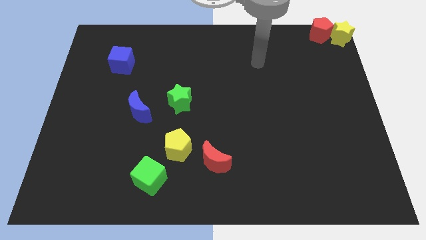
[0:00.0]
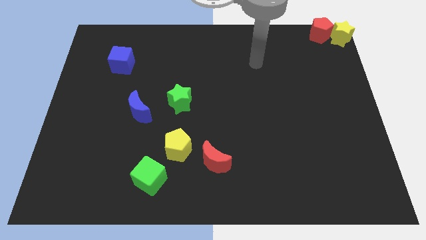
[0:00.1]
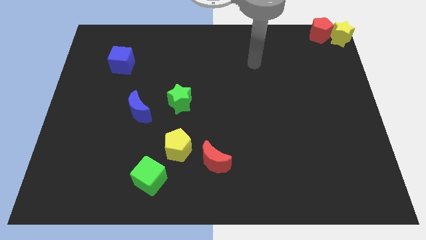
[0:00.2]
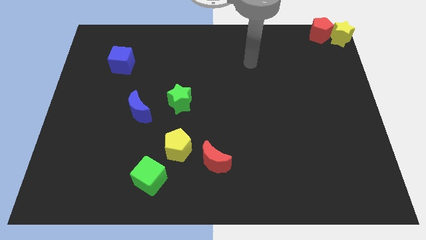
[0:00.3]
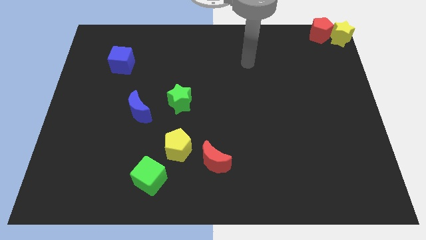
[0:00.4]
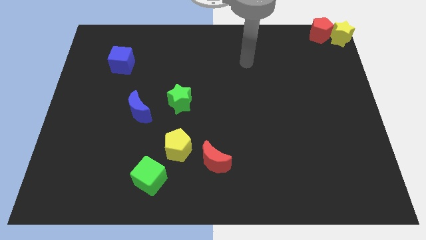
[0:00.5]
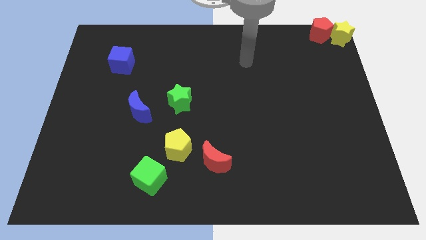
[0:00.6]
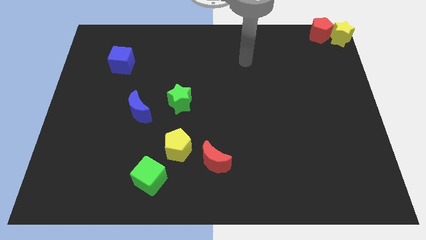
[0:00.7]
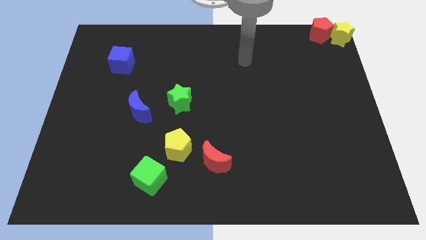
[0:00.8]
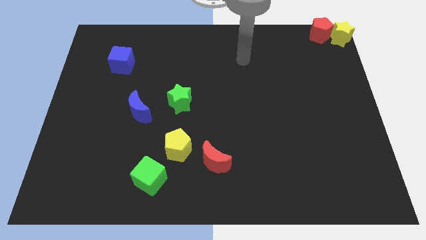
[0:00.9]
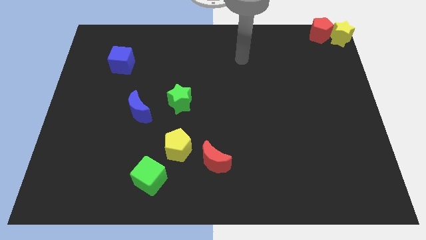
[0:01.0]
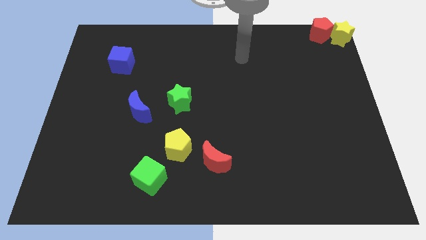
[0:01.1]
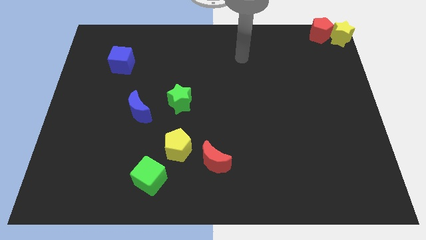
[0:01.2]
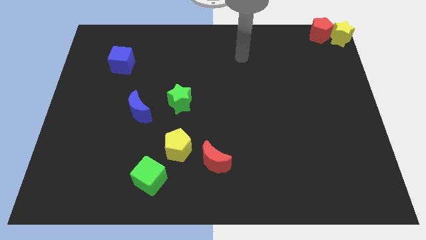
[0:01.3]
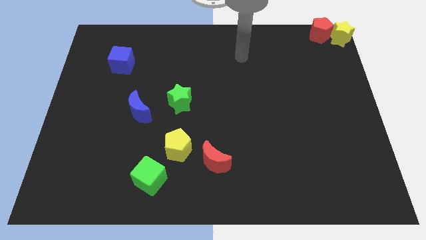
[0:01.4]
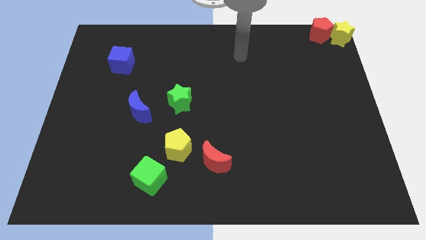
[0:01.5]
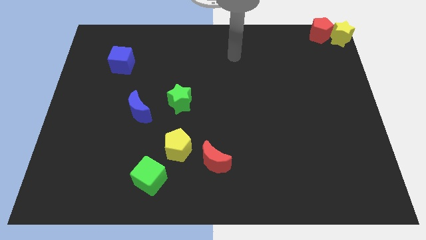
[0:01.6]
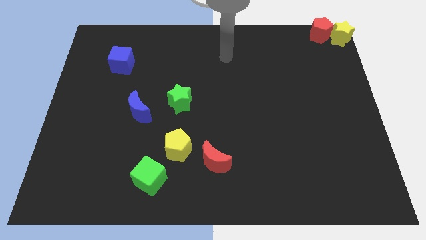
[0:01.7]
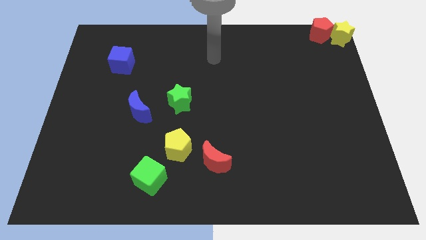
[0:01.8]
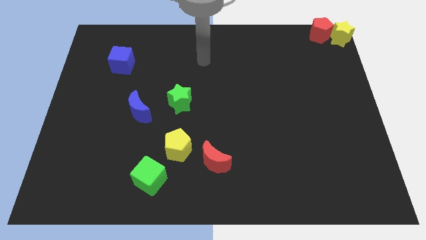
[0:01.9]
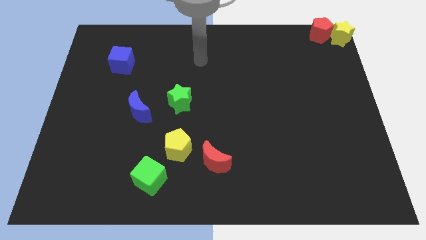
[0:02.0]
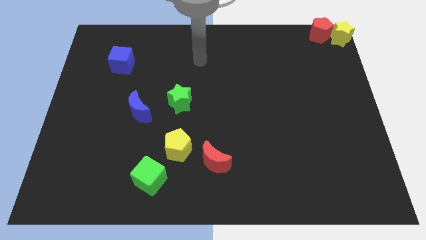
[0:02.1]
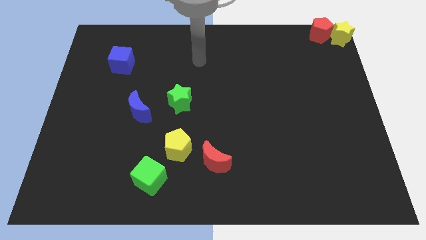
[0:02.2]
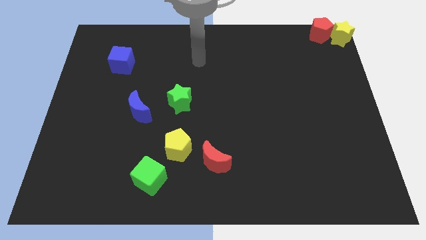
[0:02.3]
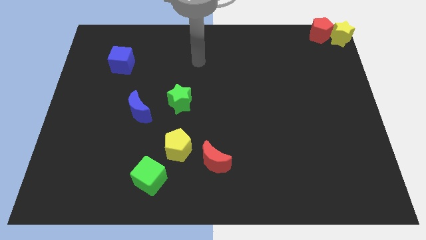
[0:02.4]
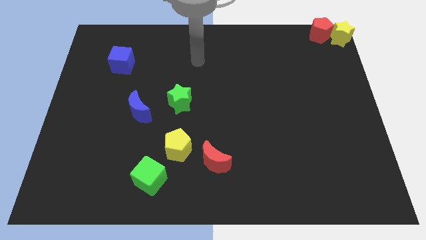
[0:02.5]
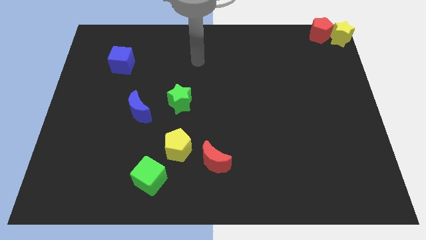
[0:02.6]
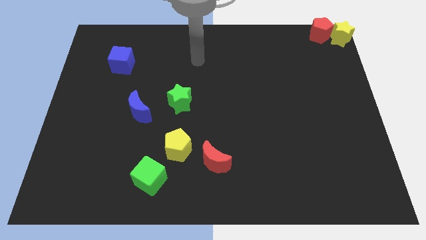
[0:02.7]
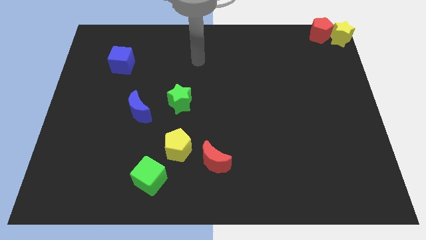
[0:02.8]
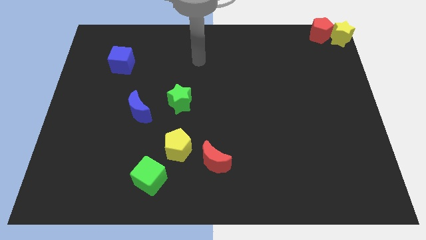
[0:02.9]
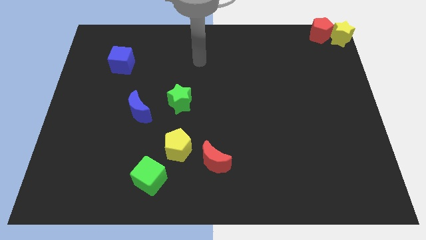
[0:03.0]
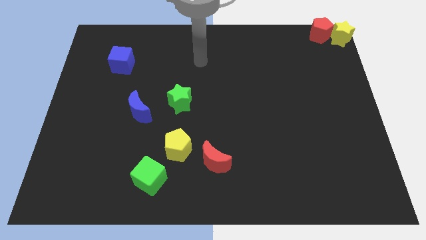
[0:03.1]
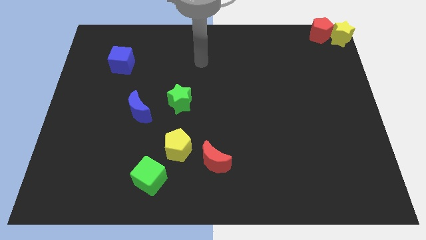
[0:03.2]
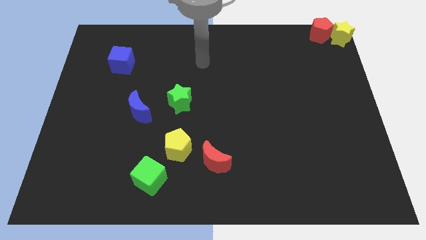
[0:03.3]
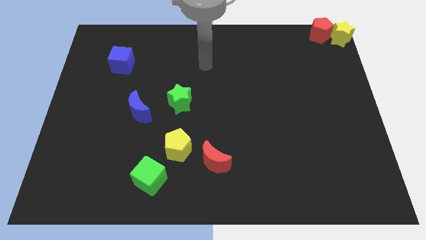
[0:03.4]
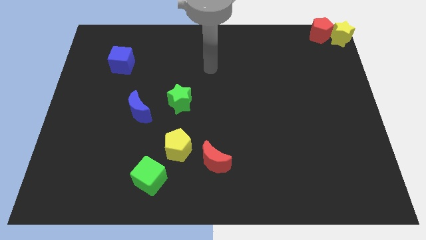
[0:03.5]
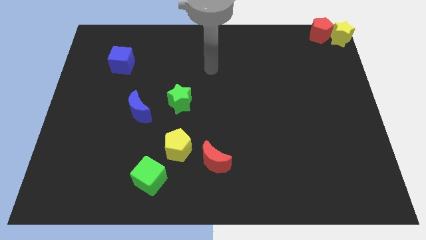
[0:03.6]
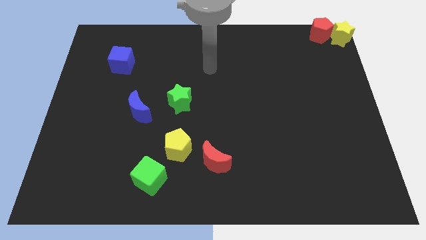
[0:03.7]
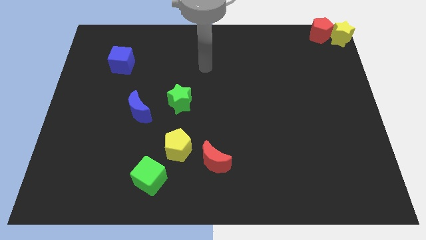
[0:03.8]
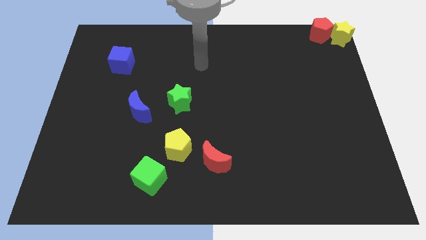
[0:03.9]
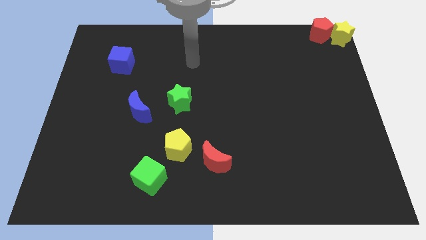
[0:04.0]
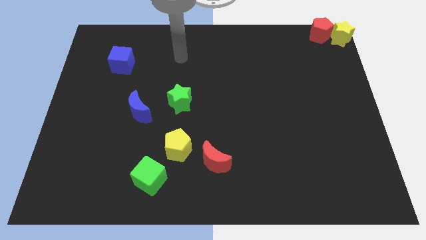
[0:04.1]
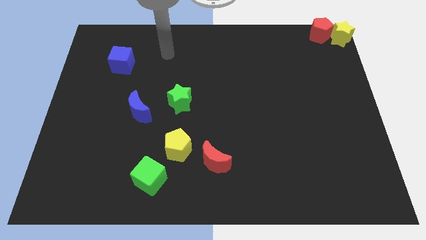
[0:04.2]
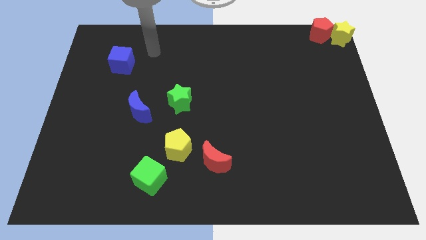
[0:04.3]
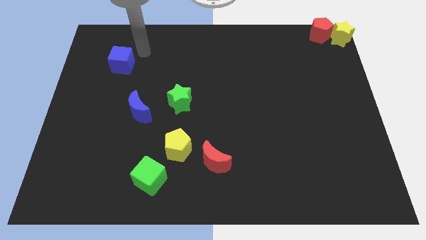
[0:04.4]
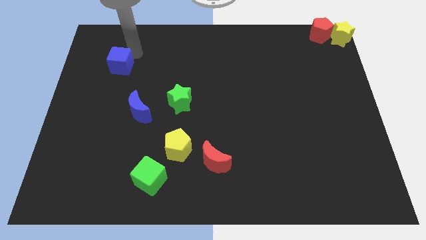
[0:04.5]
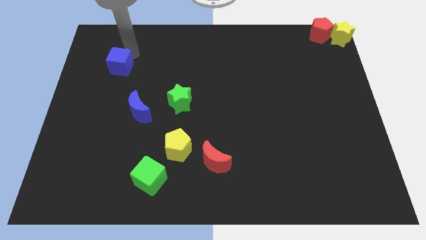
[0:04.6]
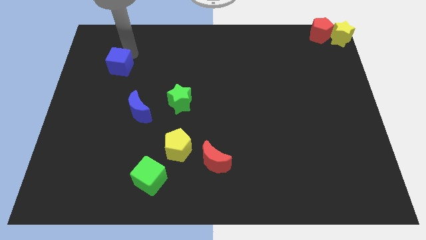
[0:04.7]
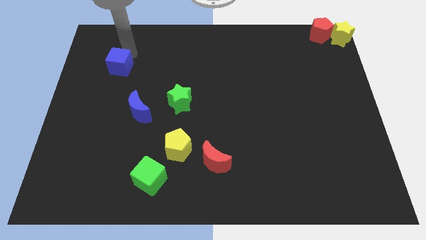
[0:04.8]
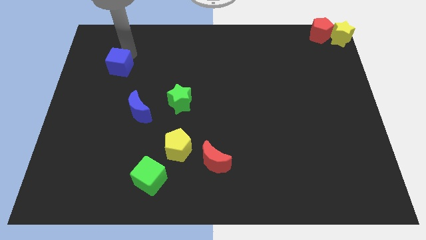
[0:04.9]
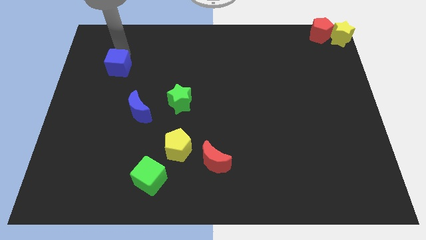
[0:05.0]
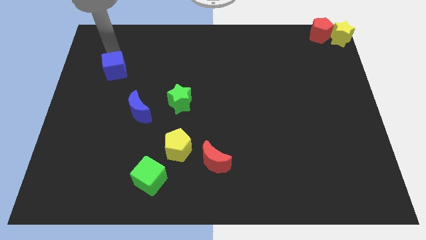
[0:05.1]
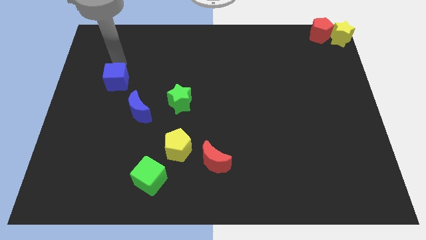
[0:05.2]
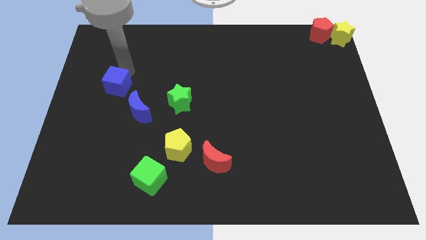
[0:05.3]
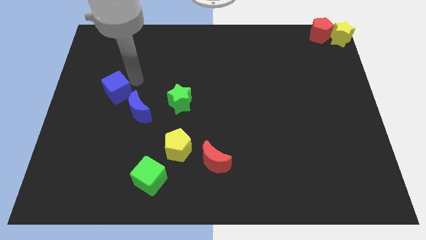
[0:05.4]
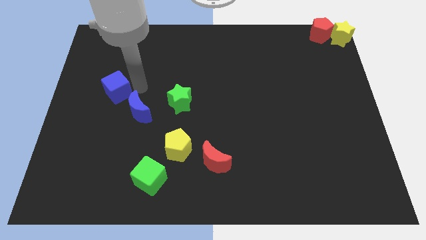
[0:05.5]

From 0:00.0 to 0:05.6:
move the blue cube towards the blue crescent

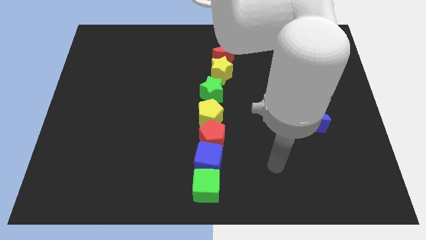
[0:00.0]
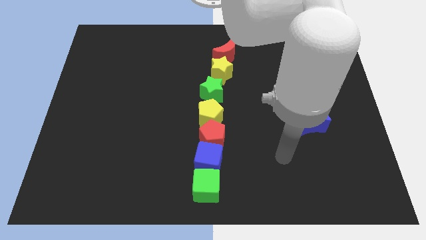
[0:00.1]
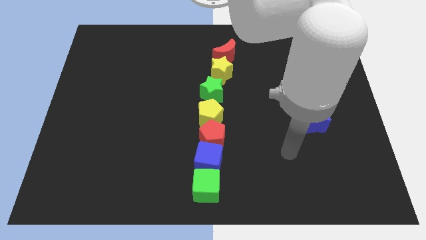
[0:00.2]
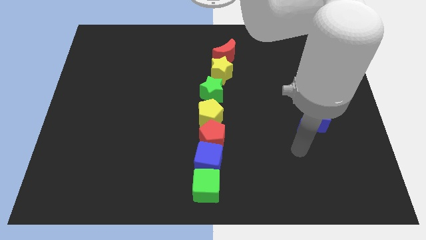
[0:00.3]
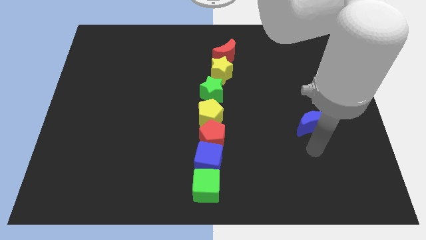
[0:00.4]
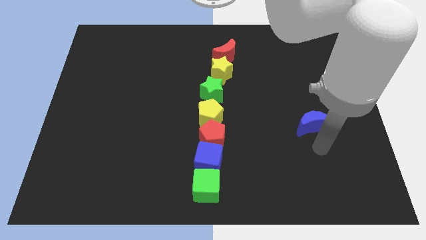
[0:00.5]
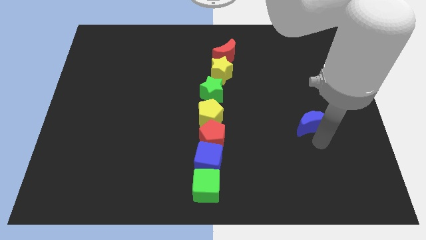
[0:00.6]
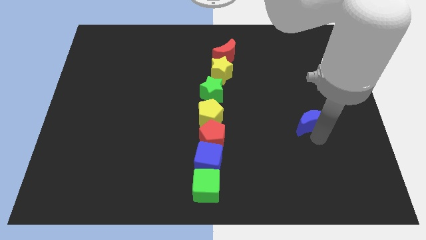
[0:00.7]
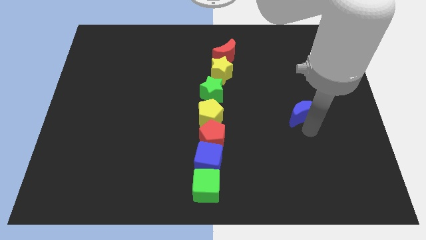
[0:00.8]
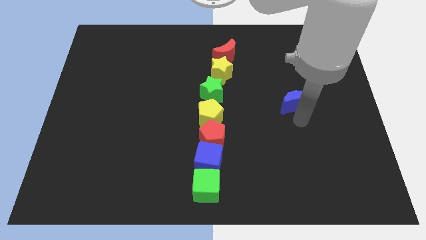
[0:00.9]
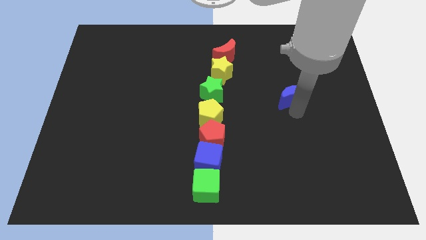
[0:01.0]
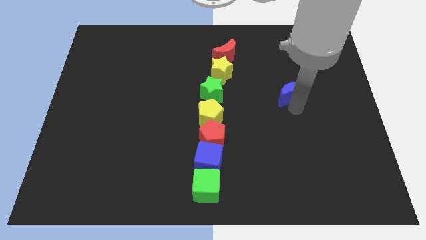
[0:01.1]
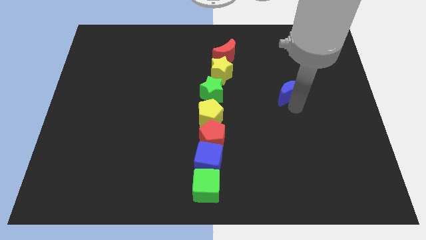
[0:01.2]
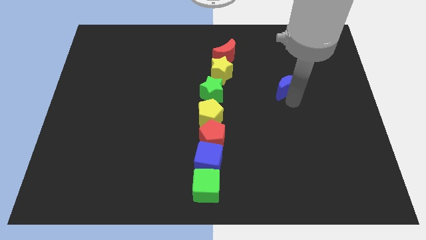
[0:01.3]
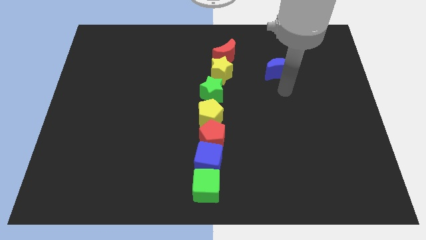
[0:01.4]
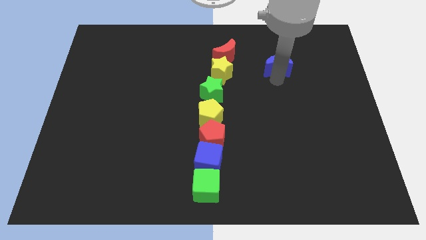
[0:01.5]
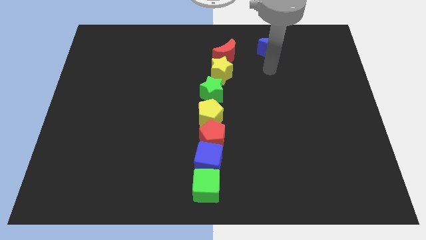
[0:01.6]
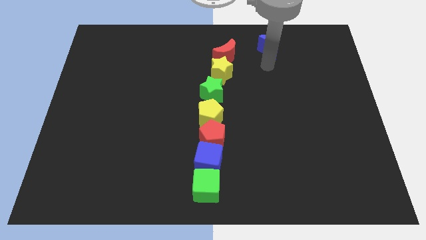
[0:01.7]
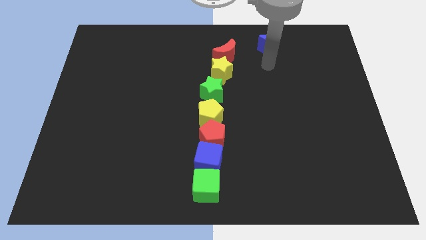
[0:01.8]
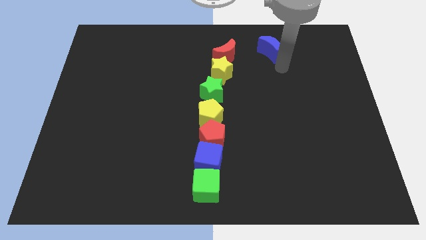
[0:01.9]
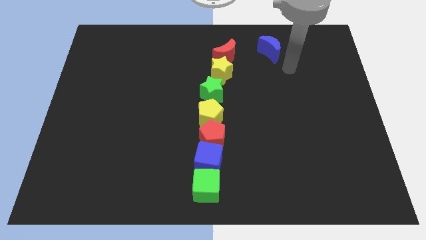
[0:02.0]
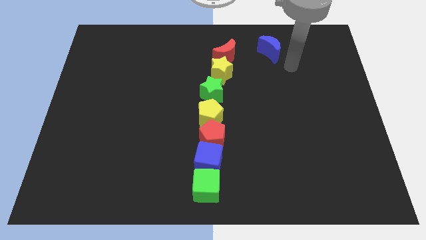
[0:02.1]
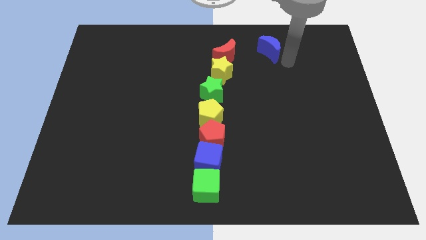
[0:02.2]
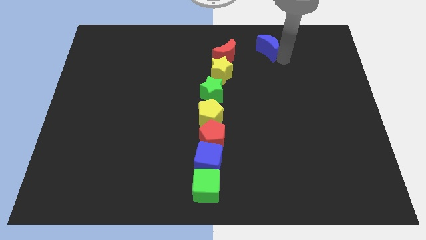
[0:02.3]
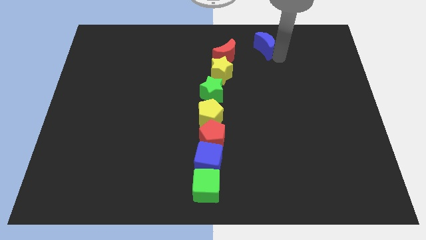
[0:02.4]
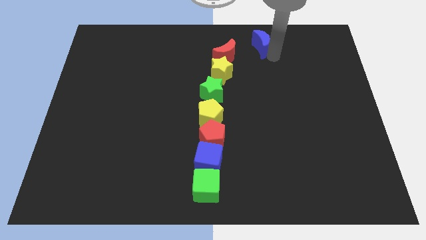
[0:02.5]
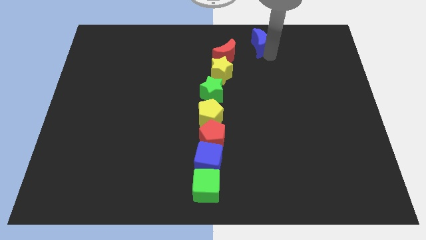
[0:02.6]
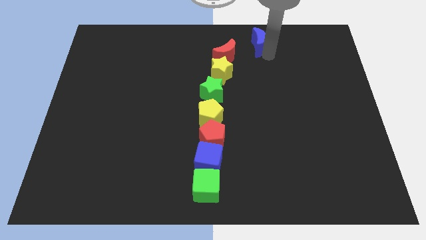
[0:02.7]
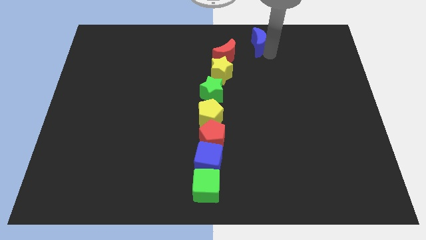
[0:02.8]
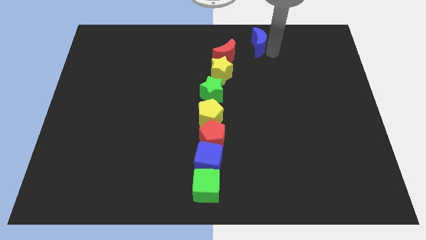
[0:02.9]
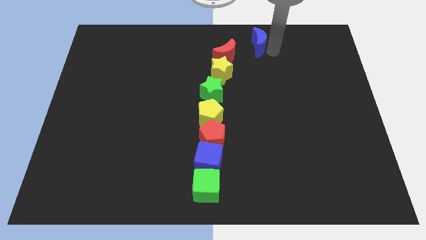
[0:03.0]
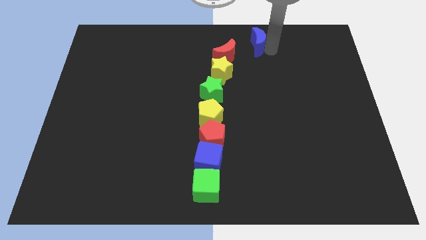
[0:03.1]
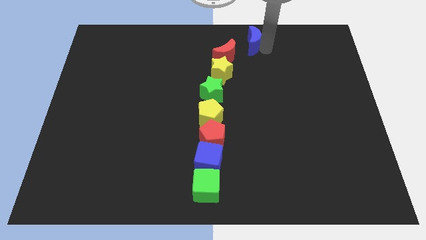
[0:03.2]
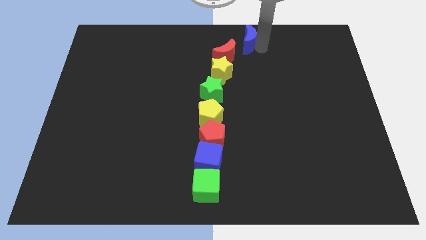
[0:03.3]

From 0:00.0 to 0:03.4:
drag blue moon towards top of the board
